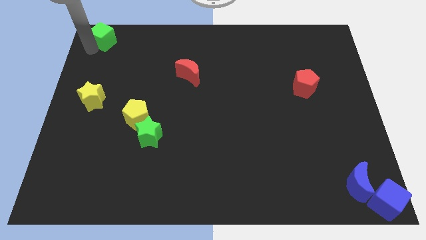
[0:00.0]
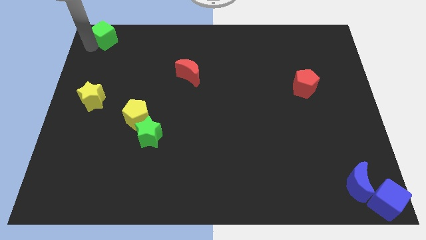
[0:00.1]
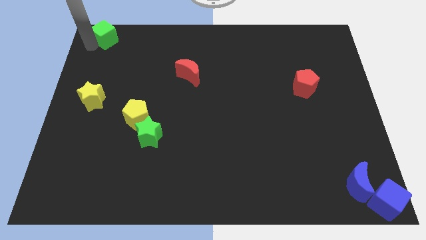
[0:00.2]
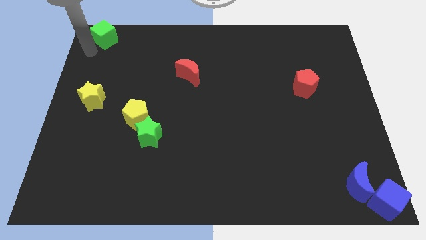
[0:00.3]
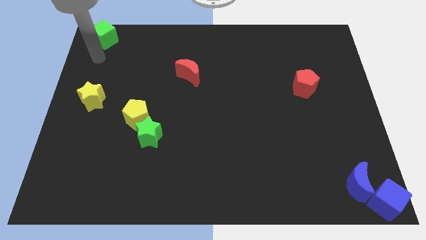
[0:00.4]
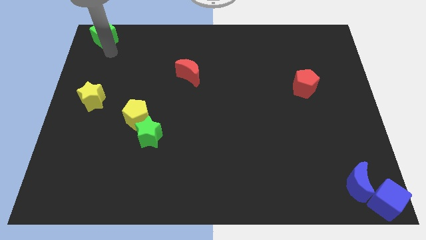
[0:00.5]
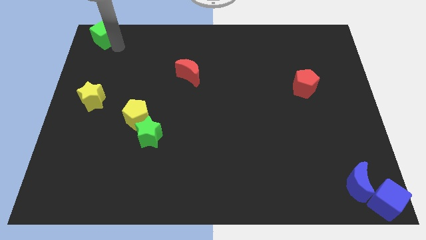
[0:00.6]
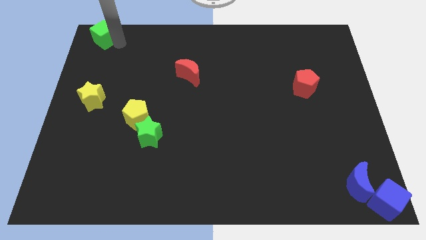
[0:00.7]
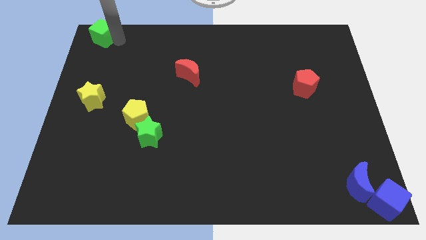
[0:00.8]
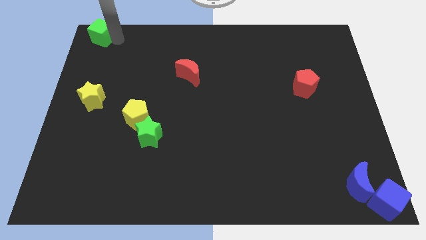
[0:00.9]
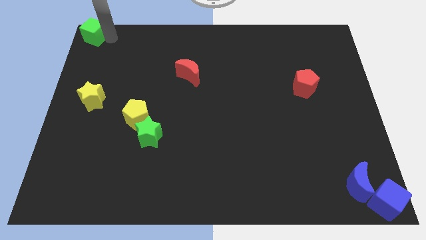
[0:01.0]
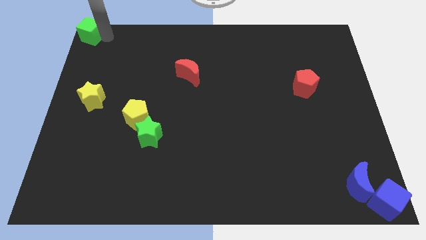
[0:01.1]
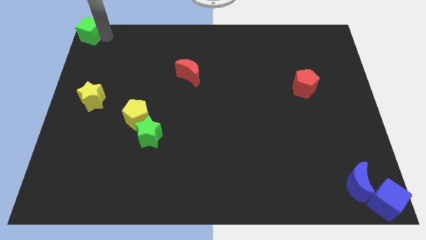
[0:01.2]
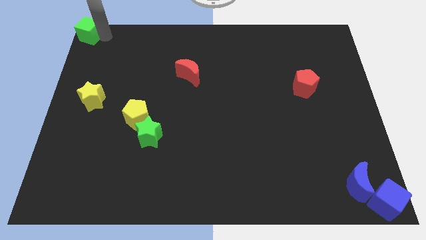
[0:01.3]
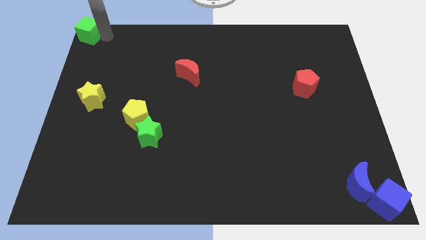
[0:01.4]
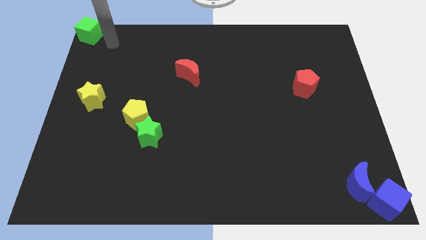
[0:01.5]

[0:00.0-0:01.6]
push the green cube to the top left corner of the board

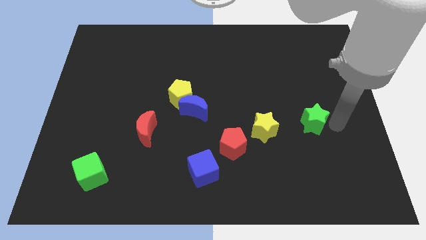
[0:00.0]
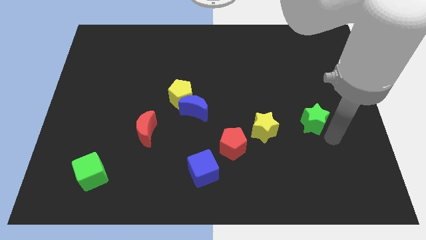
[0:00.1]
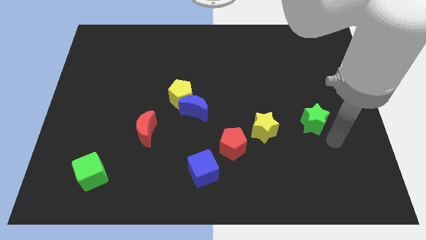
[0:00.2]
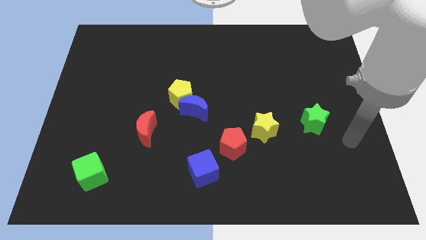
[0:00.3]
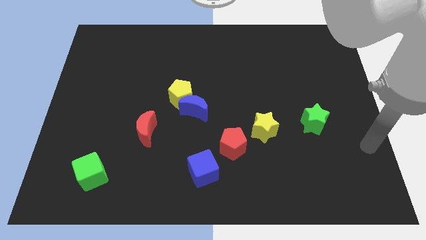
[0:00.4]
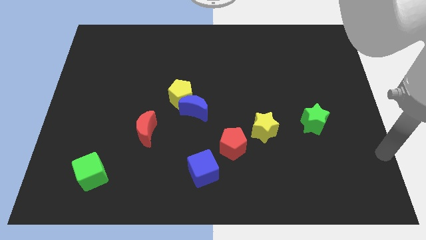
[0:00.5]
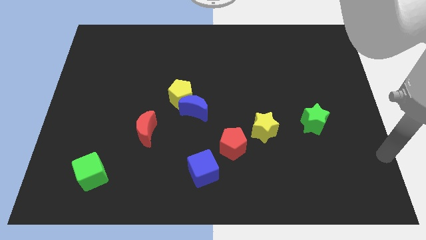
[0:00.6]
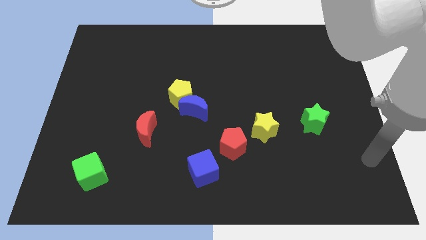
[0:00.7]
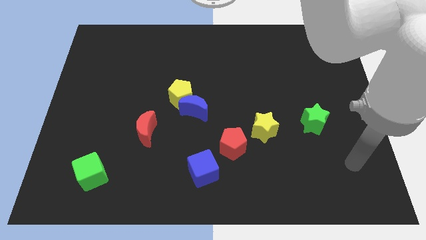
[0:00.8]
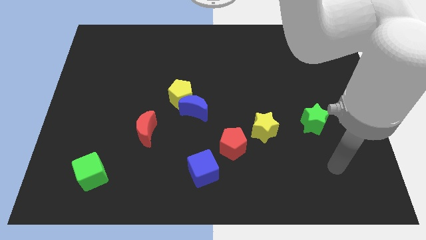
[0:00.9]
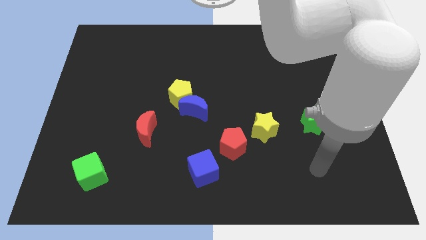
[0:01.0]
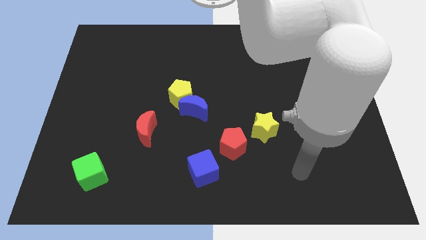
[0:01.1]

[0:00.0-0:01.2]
place your arm to the bottom of the green star

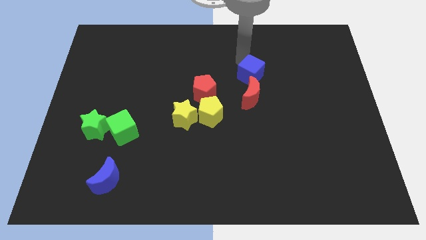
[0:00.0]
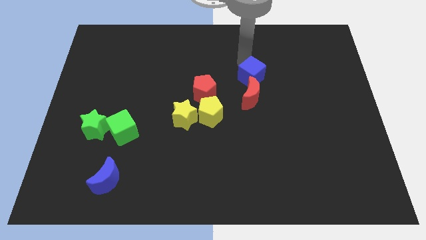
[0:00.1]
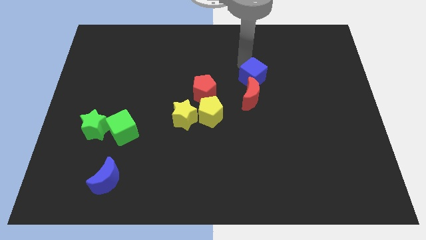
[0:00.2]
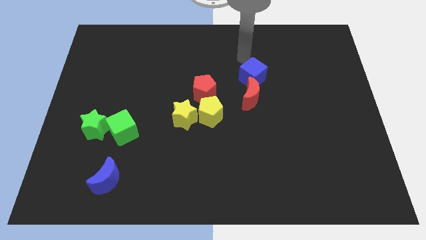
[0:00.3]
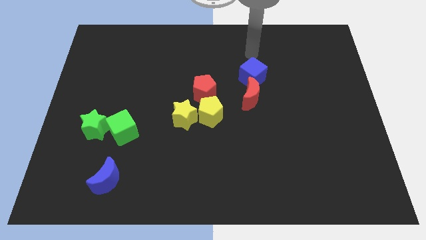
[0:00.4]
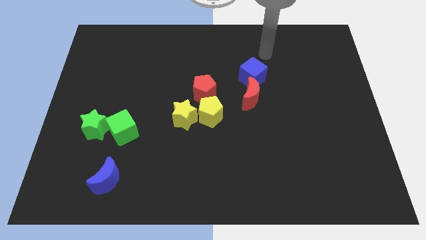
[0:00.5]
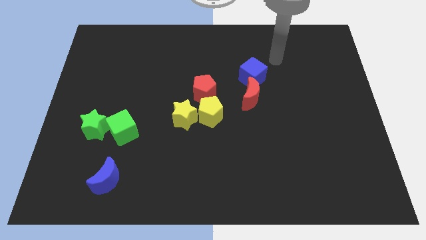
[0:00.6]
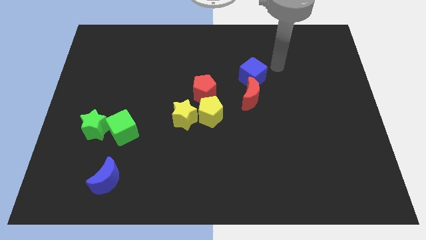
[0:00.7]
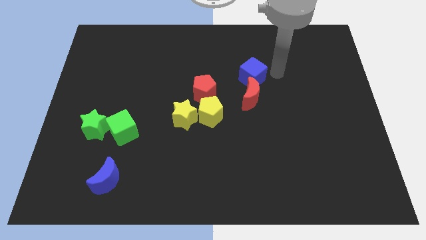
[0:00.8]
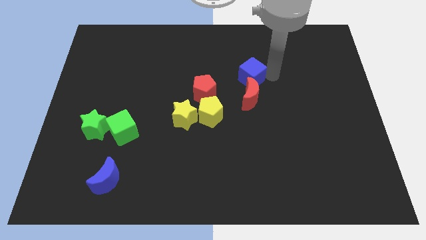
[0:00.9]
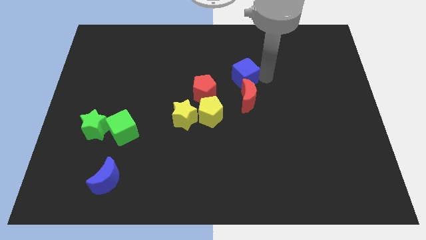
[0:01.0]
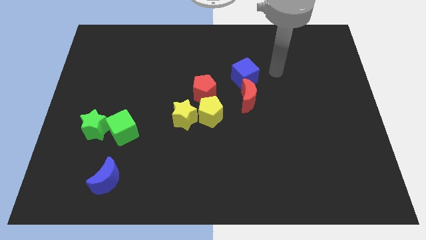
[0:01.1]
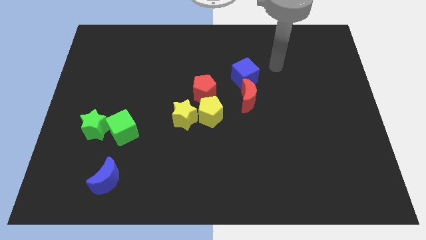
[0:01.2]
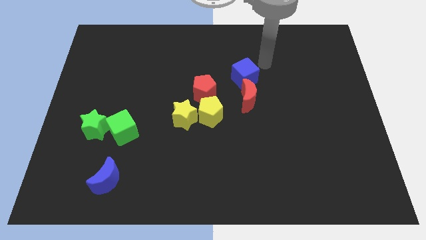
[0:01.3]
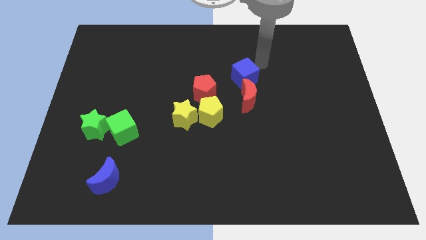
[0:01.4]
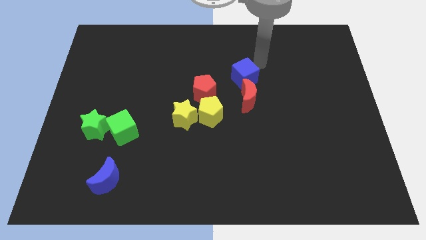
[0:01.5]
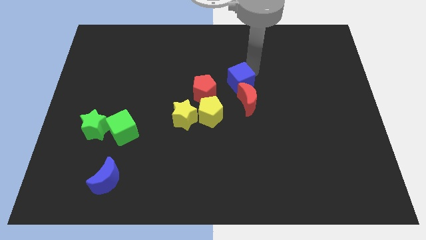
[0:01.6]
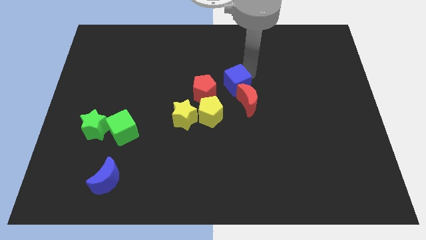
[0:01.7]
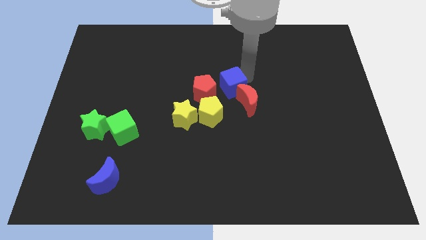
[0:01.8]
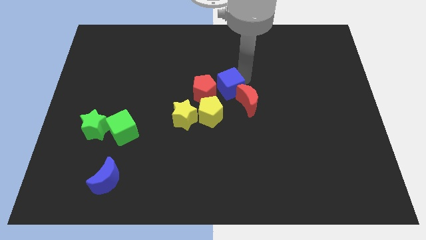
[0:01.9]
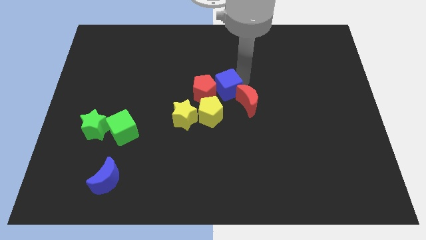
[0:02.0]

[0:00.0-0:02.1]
move the blue cube into the red pentagon

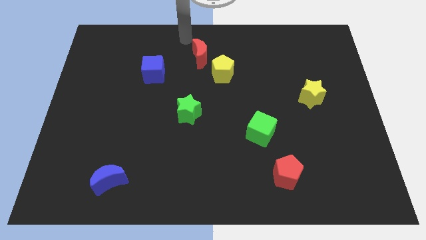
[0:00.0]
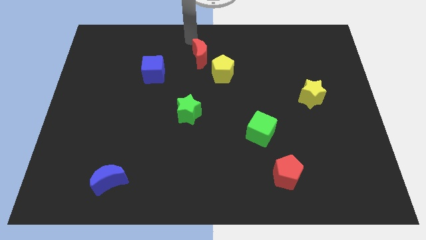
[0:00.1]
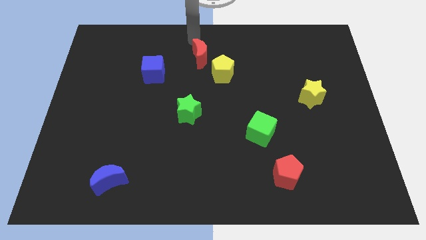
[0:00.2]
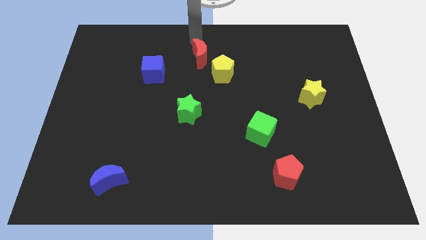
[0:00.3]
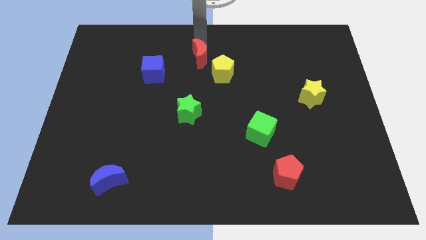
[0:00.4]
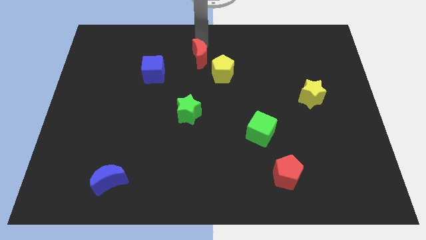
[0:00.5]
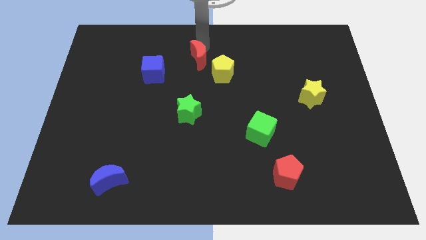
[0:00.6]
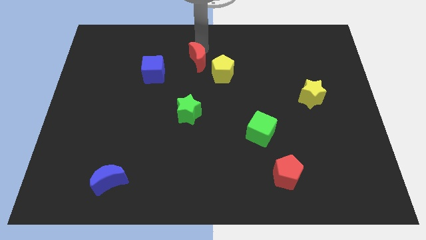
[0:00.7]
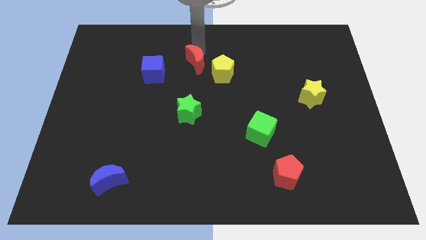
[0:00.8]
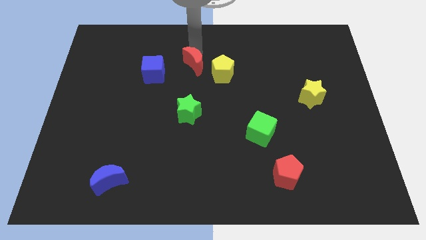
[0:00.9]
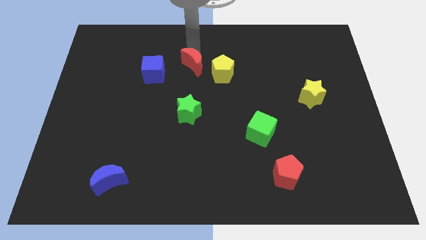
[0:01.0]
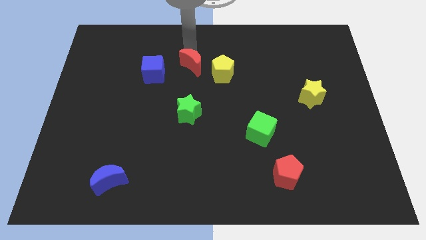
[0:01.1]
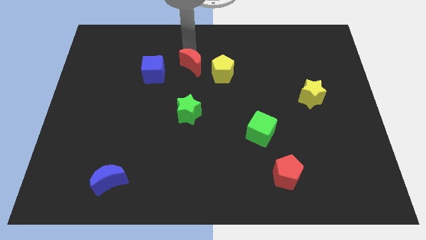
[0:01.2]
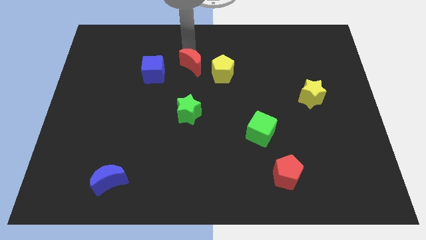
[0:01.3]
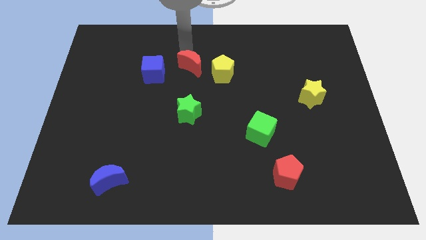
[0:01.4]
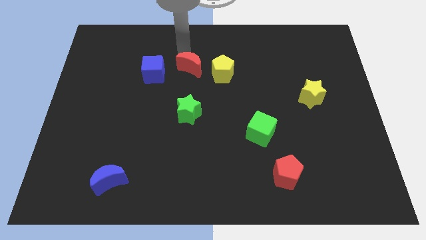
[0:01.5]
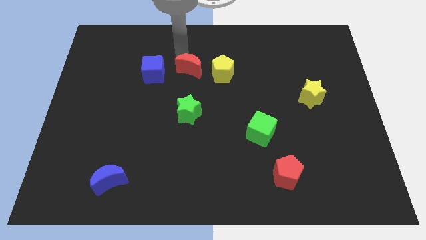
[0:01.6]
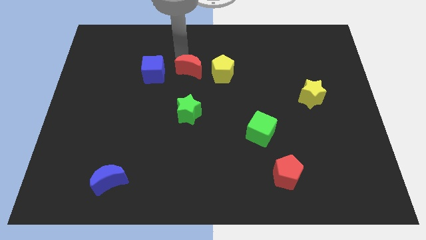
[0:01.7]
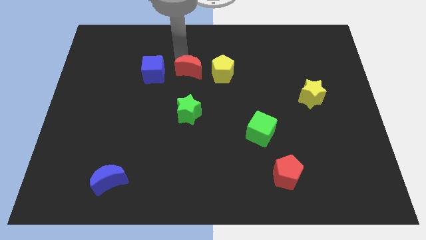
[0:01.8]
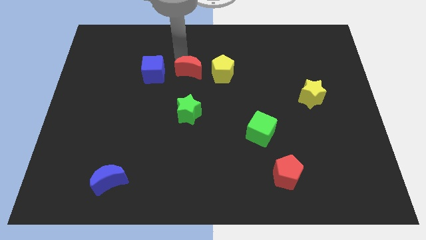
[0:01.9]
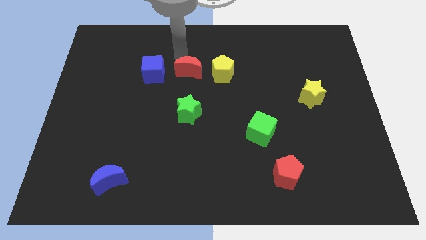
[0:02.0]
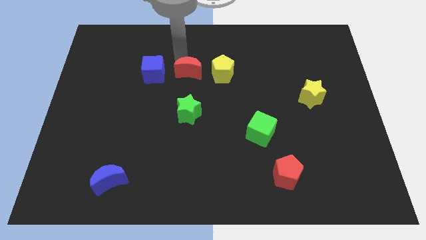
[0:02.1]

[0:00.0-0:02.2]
place red moon in between blue cube and yellow pentagon

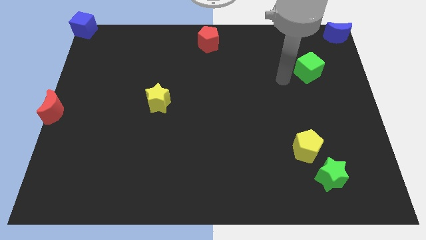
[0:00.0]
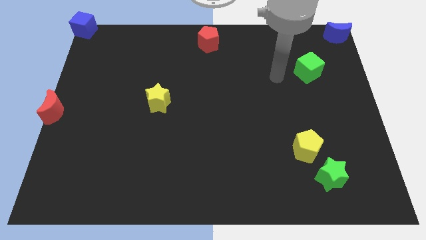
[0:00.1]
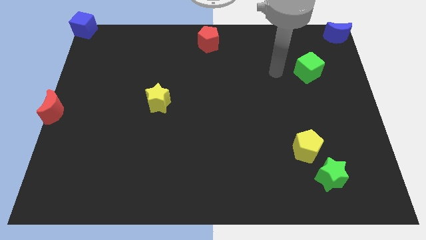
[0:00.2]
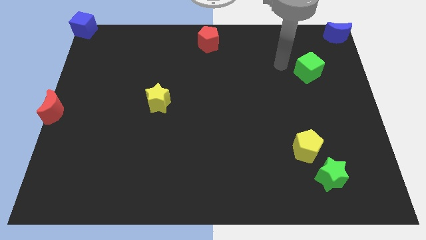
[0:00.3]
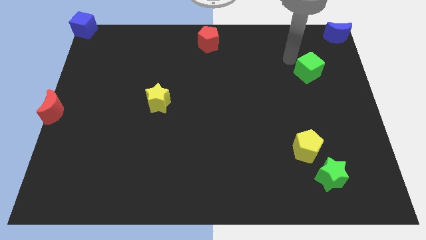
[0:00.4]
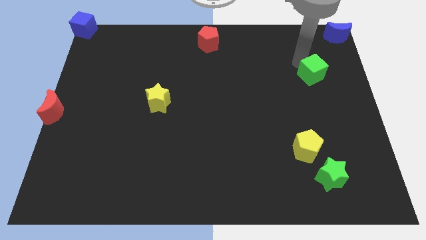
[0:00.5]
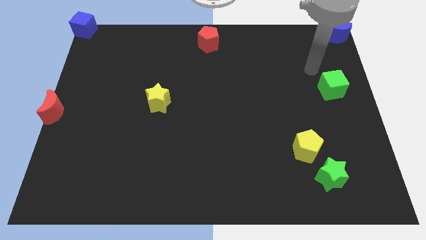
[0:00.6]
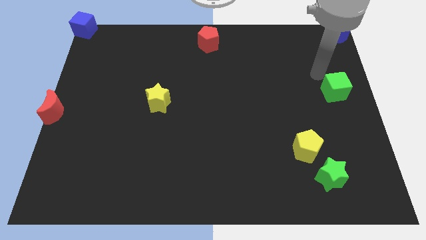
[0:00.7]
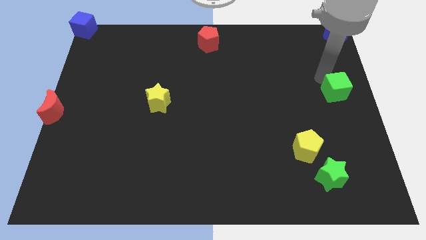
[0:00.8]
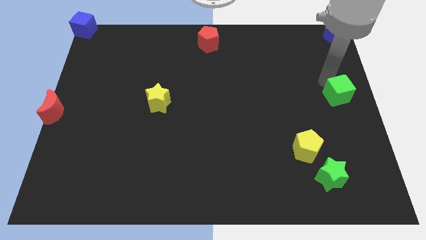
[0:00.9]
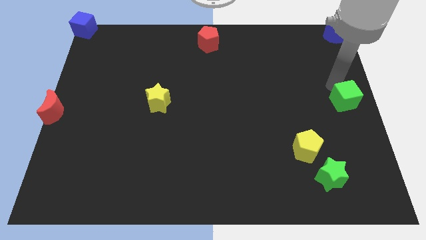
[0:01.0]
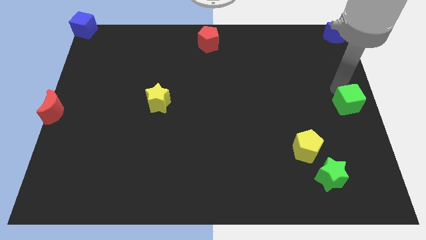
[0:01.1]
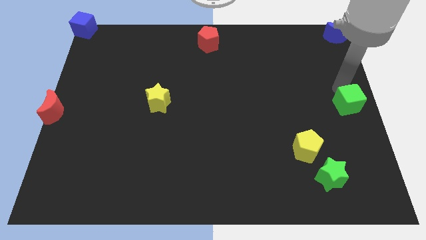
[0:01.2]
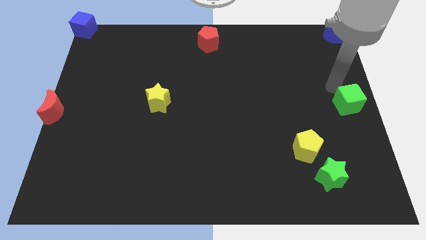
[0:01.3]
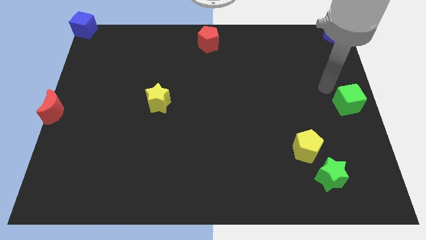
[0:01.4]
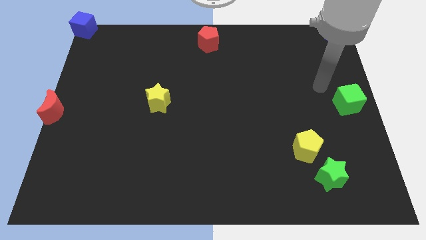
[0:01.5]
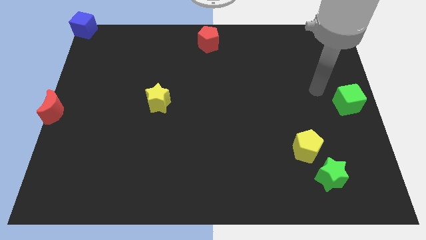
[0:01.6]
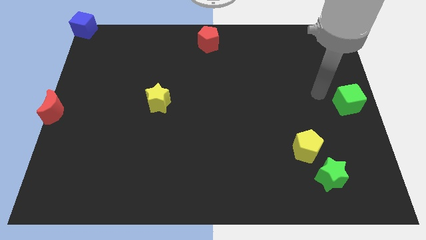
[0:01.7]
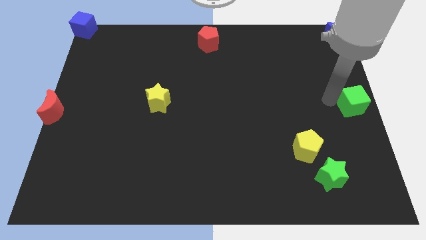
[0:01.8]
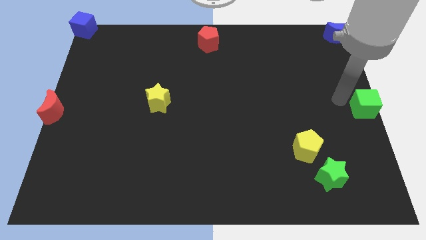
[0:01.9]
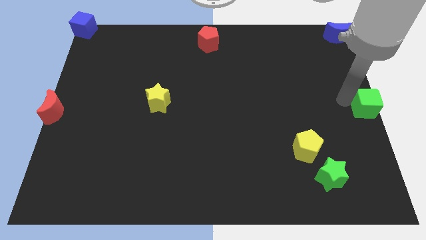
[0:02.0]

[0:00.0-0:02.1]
move the green cube to the center right of the board
